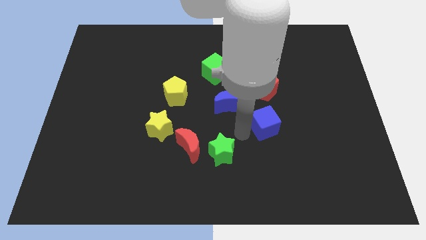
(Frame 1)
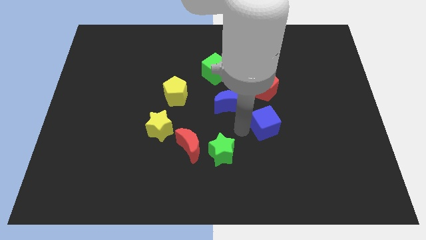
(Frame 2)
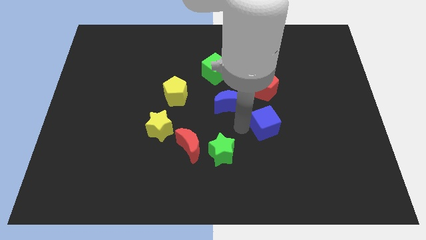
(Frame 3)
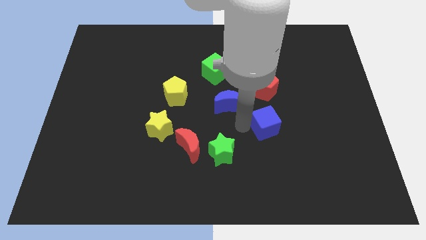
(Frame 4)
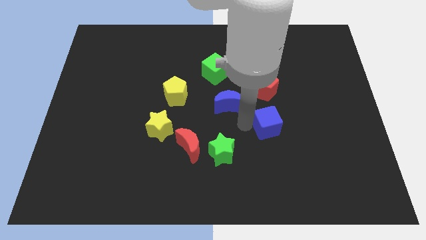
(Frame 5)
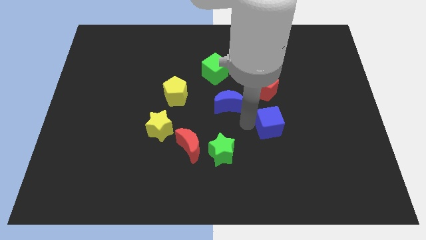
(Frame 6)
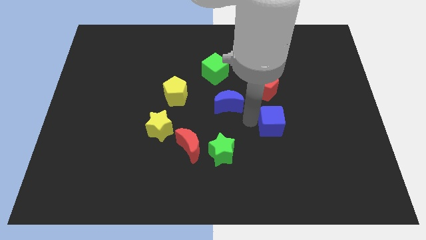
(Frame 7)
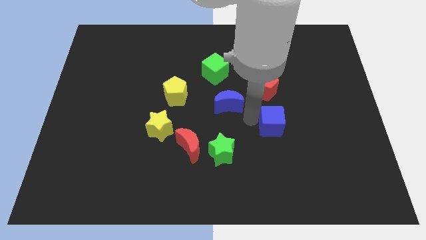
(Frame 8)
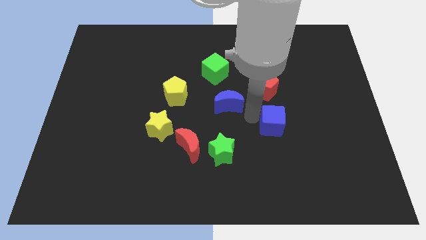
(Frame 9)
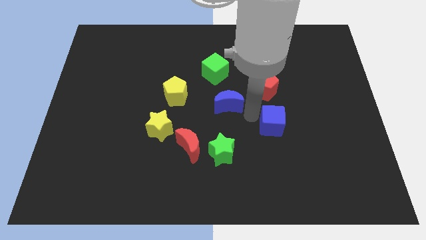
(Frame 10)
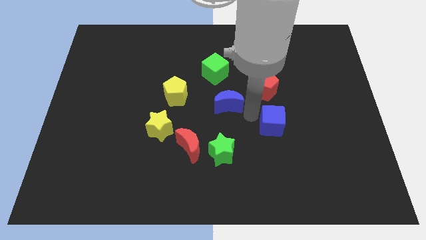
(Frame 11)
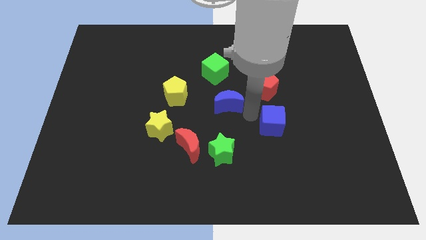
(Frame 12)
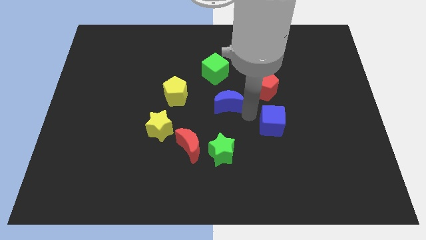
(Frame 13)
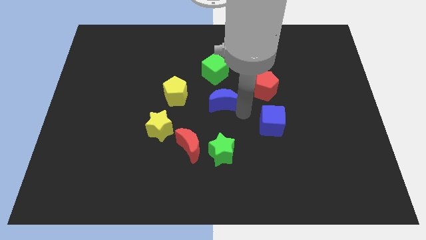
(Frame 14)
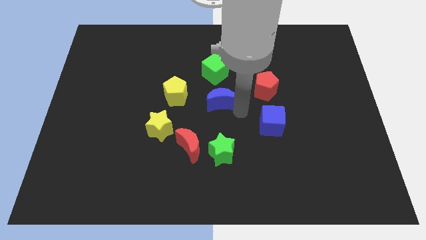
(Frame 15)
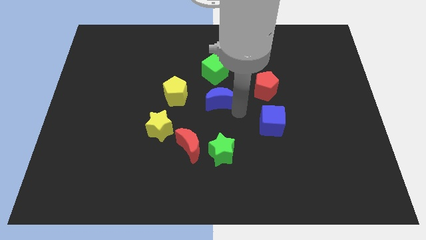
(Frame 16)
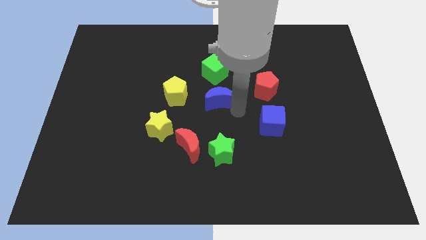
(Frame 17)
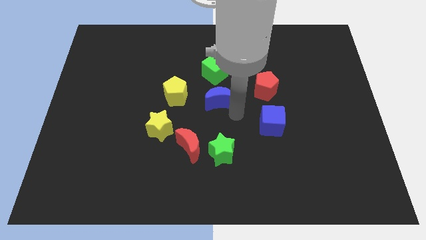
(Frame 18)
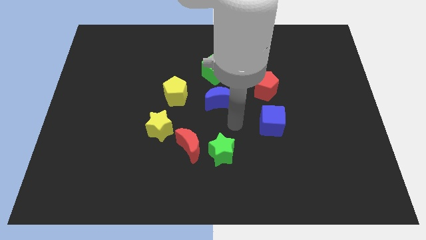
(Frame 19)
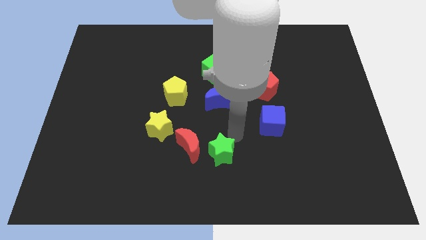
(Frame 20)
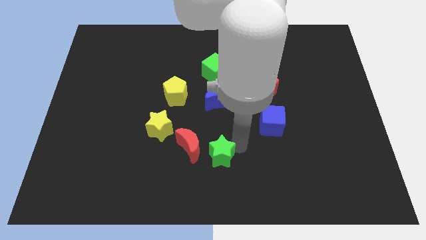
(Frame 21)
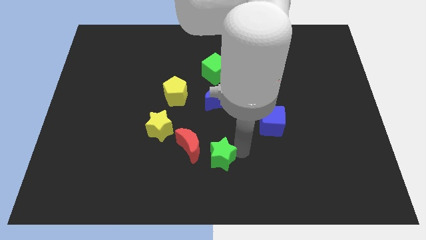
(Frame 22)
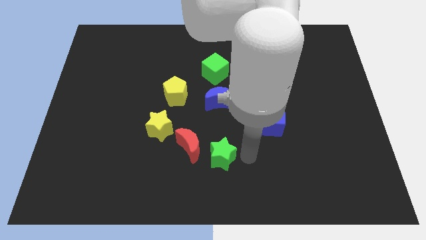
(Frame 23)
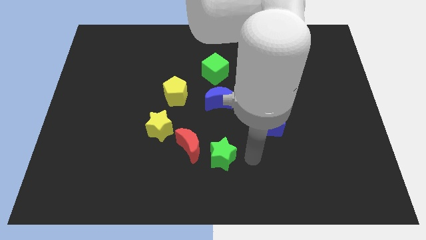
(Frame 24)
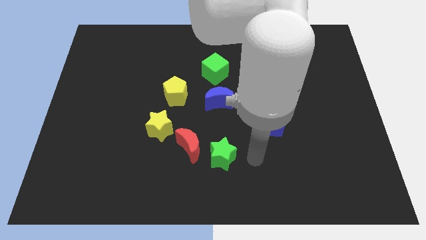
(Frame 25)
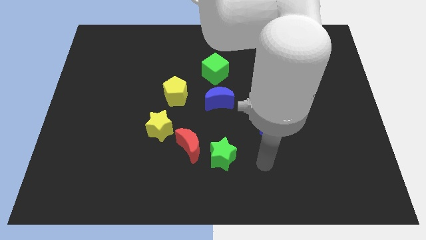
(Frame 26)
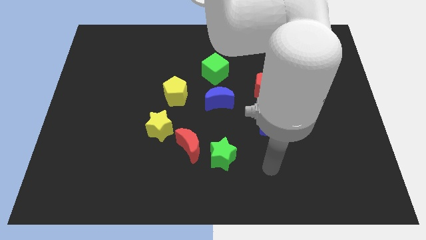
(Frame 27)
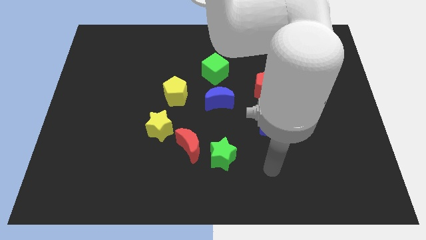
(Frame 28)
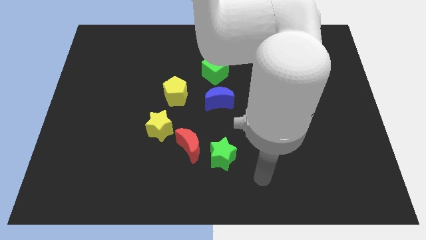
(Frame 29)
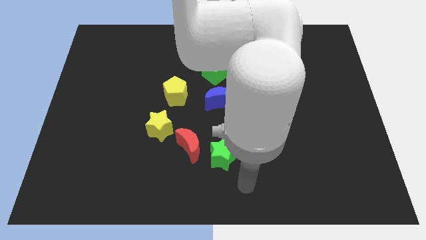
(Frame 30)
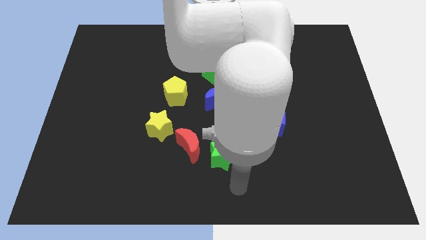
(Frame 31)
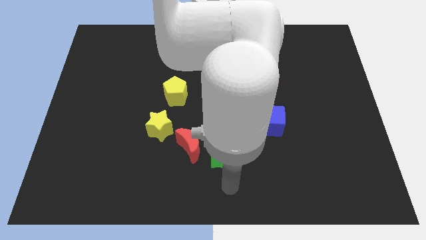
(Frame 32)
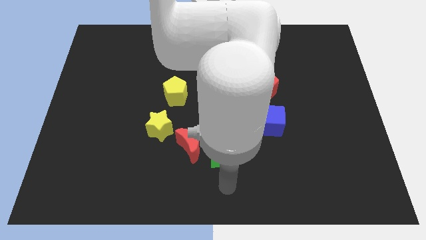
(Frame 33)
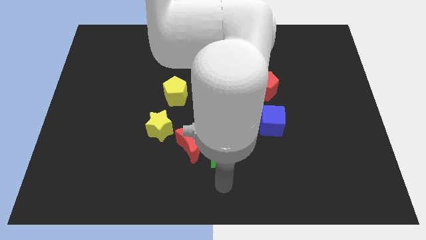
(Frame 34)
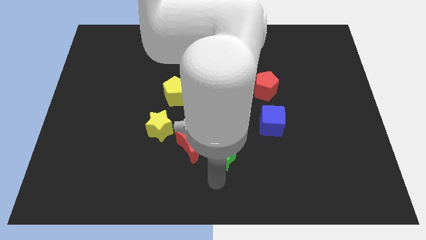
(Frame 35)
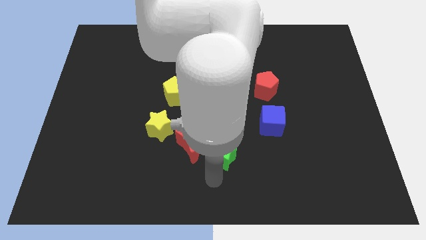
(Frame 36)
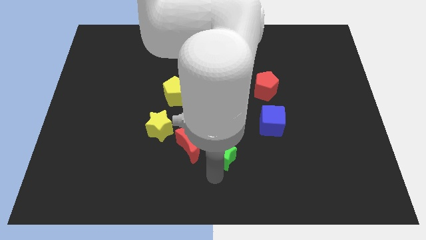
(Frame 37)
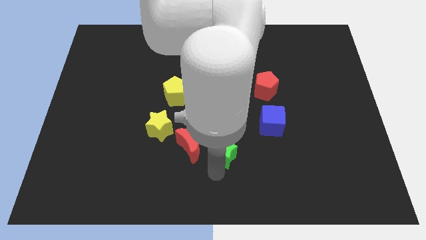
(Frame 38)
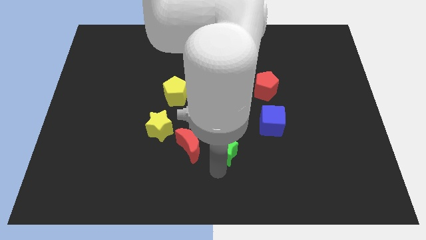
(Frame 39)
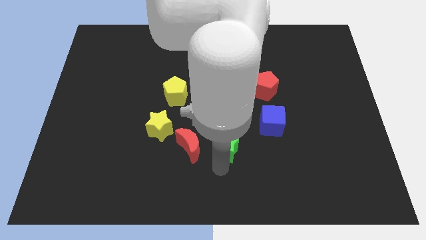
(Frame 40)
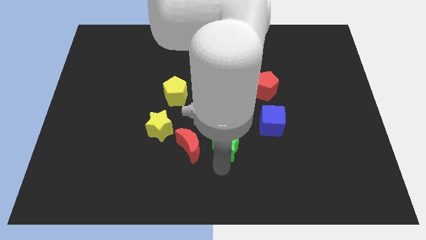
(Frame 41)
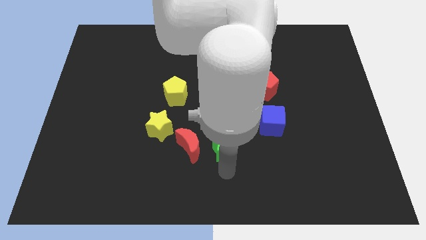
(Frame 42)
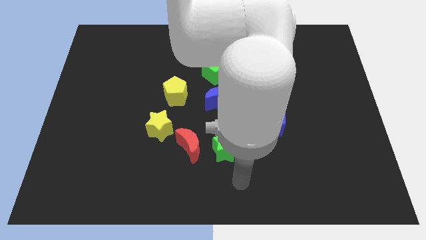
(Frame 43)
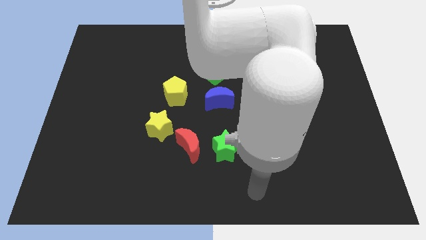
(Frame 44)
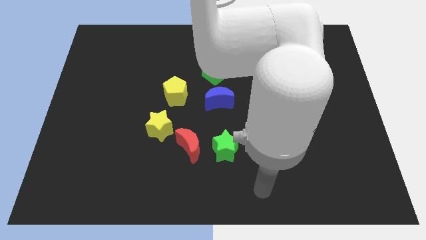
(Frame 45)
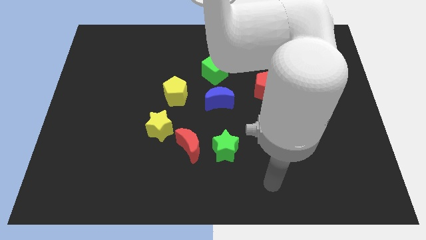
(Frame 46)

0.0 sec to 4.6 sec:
push the green star to the bottom side of the blue moon

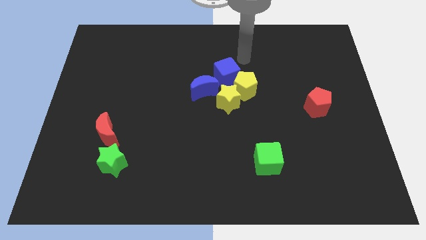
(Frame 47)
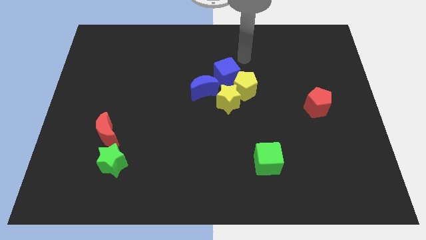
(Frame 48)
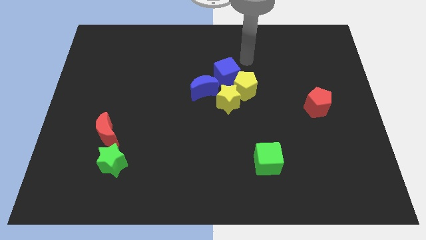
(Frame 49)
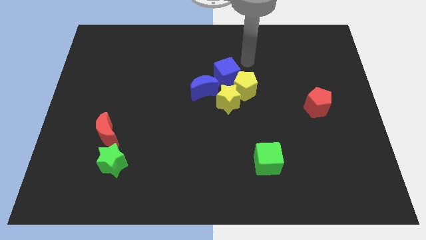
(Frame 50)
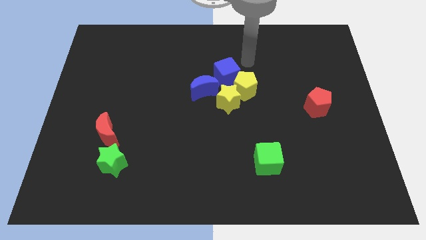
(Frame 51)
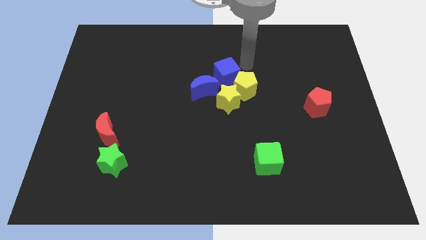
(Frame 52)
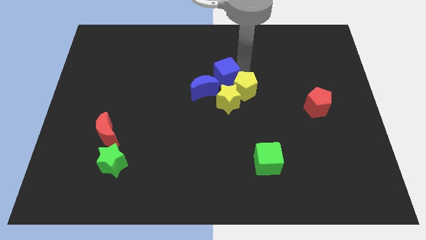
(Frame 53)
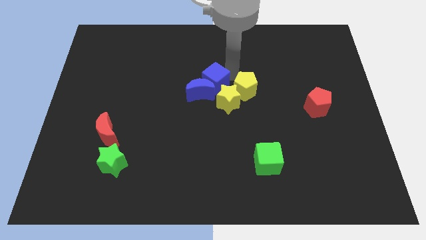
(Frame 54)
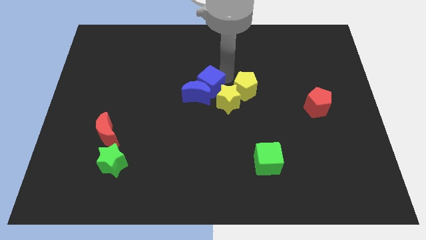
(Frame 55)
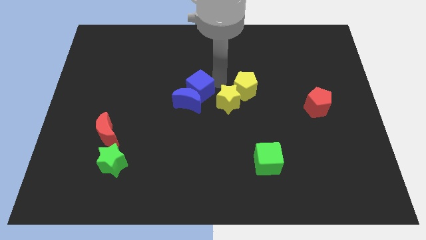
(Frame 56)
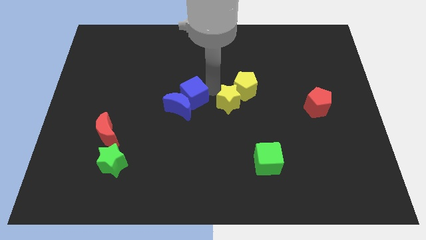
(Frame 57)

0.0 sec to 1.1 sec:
slide blue cube into blue moon

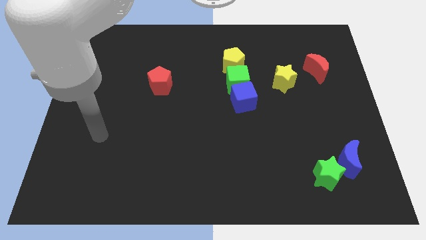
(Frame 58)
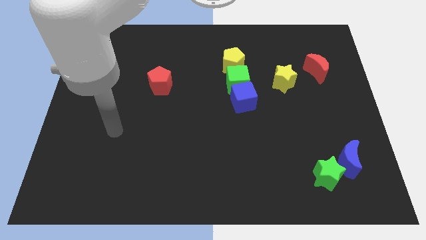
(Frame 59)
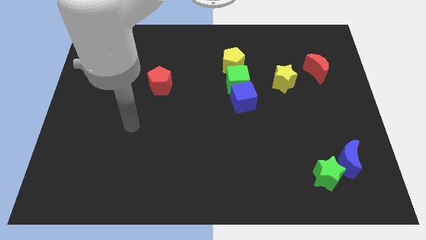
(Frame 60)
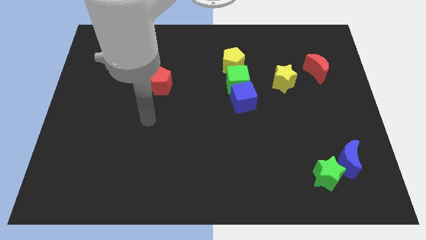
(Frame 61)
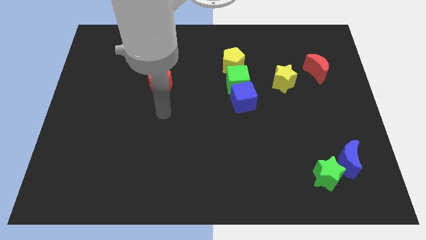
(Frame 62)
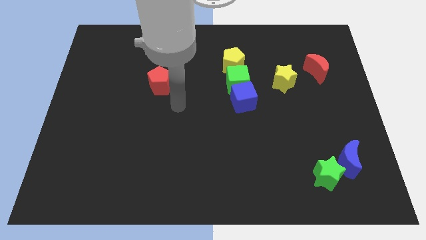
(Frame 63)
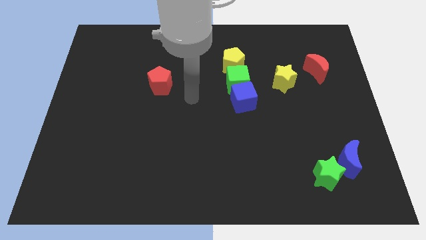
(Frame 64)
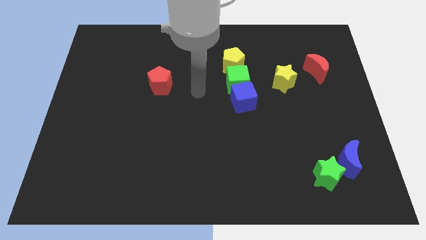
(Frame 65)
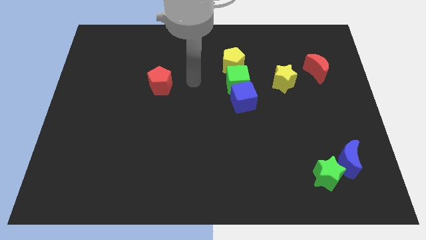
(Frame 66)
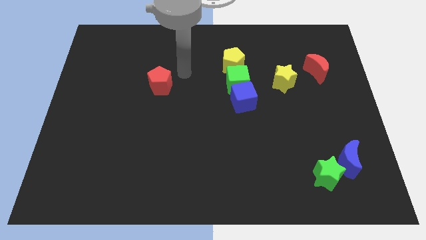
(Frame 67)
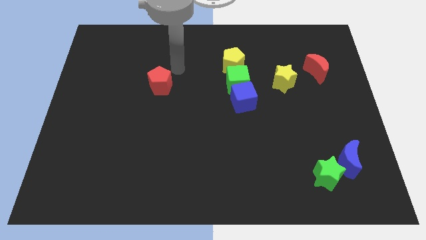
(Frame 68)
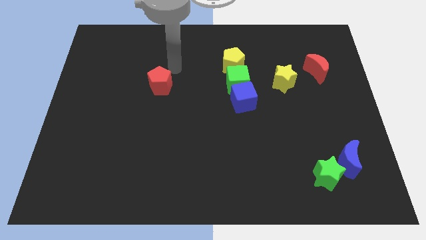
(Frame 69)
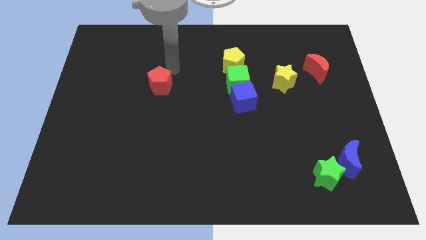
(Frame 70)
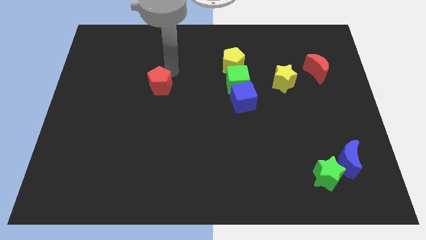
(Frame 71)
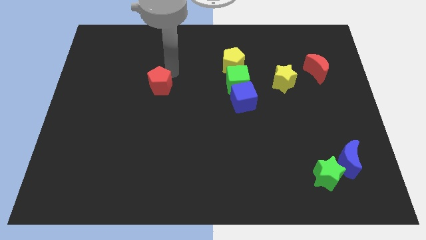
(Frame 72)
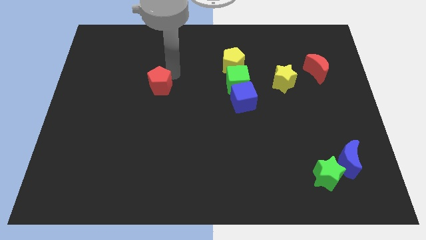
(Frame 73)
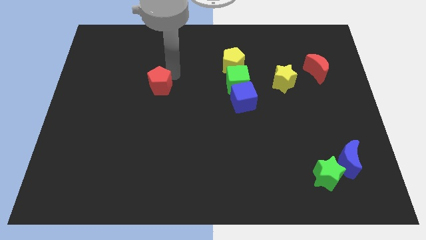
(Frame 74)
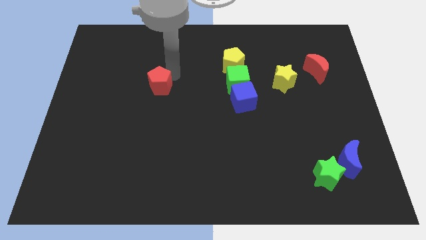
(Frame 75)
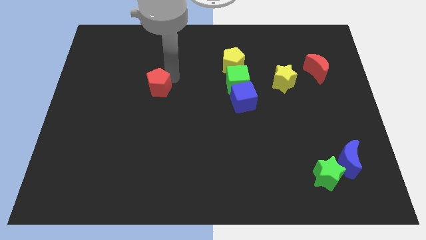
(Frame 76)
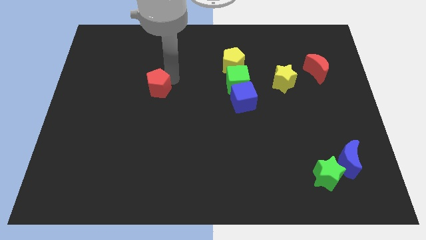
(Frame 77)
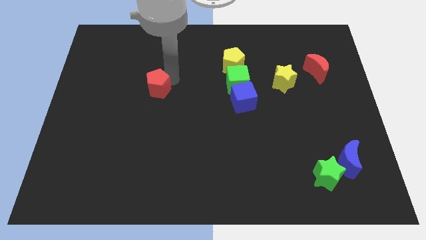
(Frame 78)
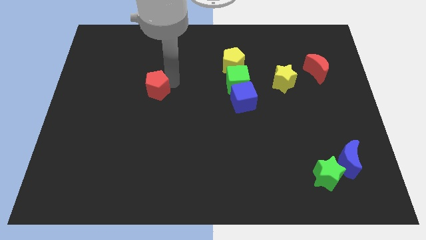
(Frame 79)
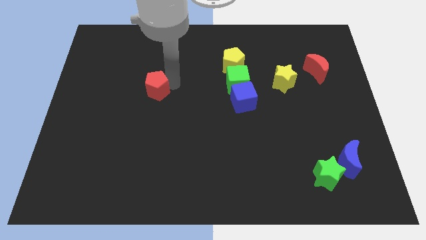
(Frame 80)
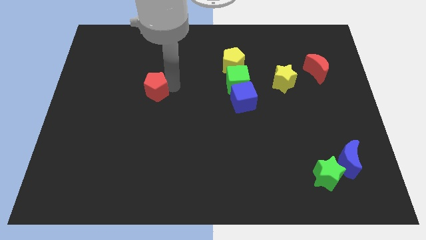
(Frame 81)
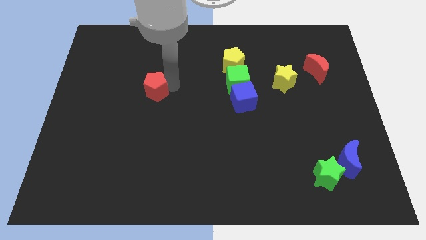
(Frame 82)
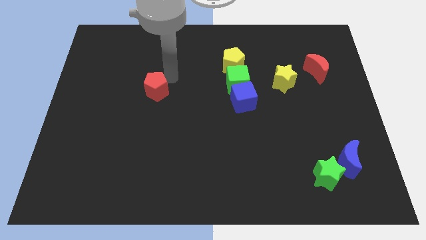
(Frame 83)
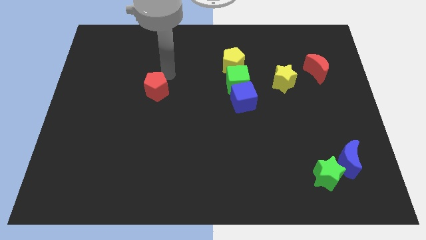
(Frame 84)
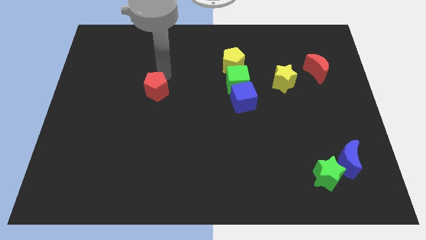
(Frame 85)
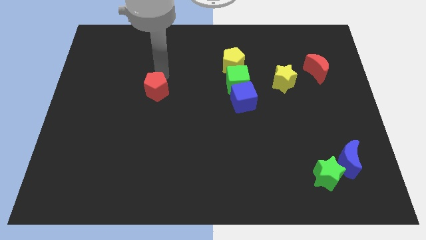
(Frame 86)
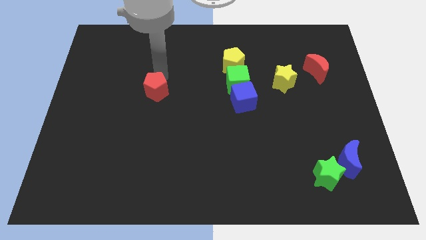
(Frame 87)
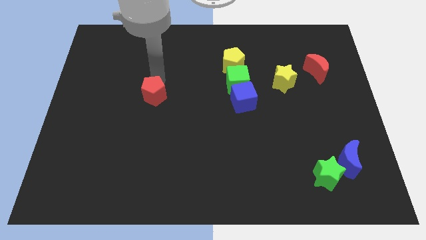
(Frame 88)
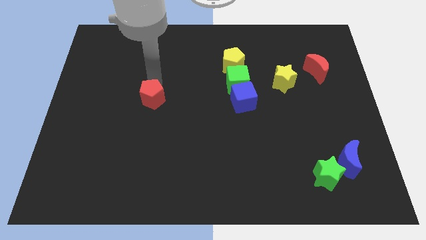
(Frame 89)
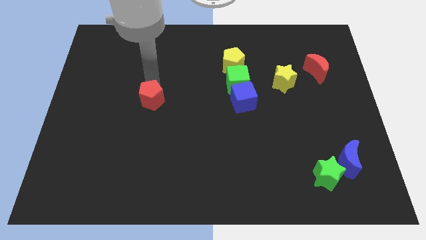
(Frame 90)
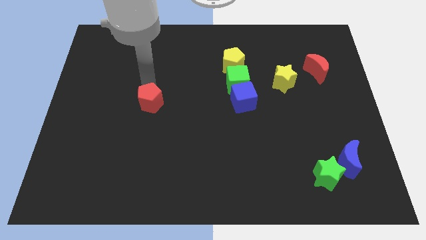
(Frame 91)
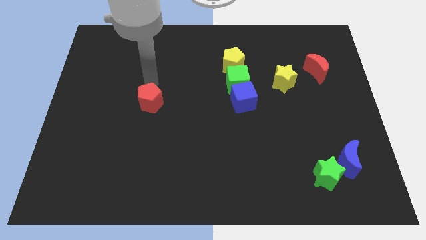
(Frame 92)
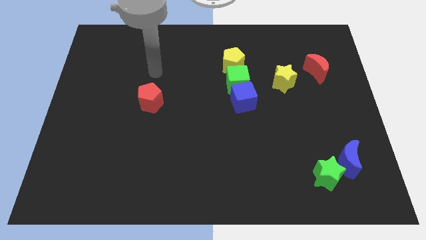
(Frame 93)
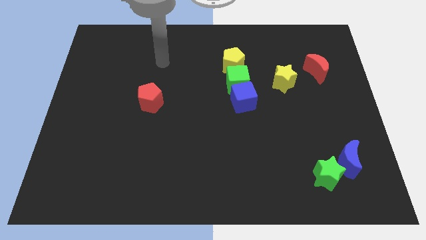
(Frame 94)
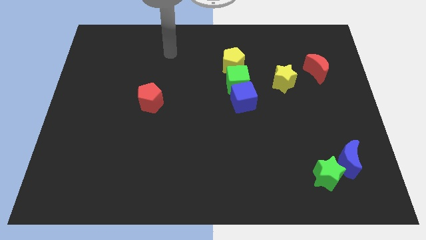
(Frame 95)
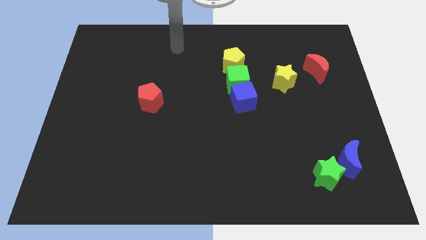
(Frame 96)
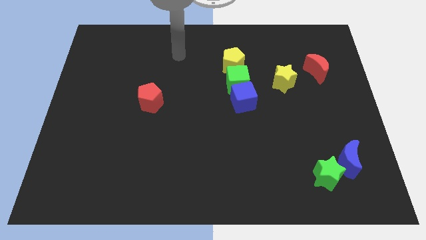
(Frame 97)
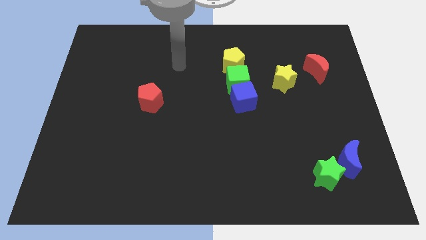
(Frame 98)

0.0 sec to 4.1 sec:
push red pentagon left to the blue cube
